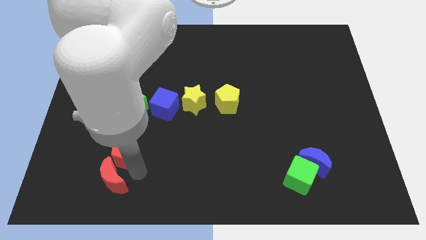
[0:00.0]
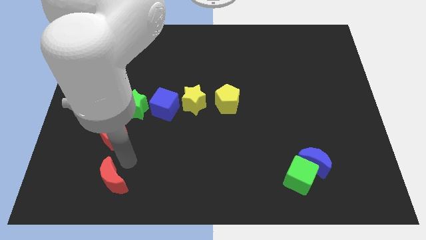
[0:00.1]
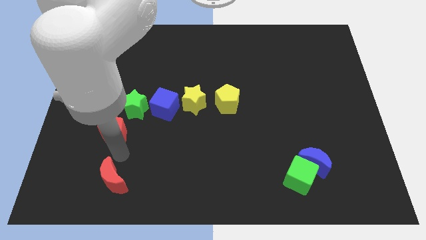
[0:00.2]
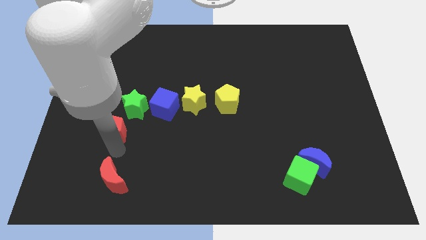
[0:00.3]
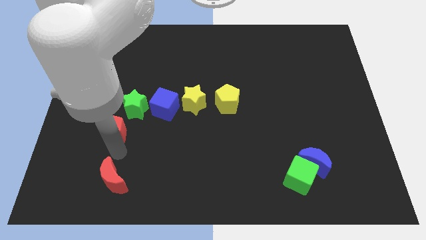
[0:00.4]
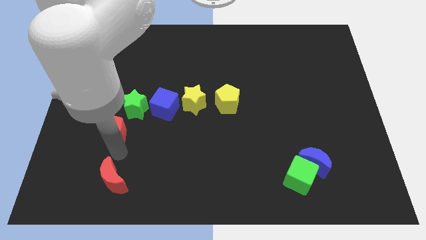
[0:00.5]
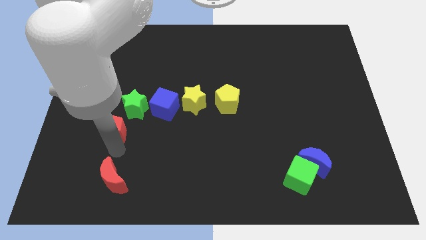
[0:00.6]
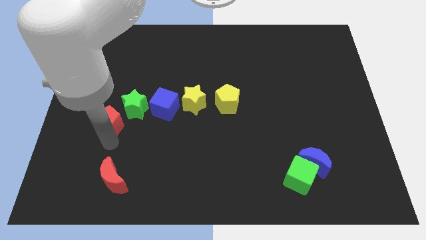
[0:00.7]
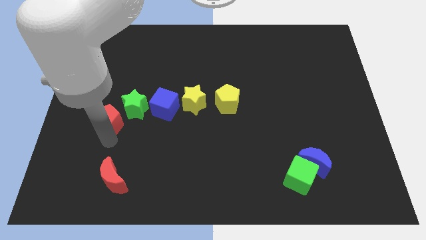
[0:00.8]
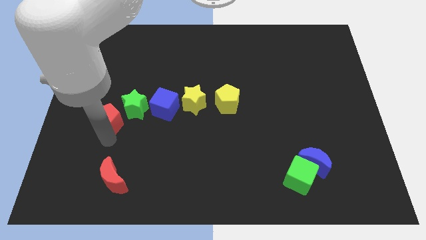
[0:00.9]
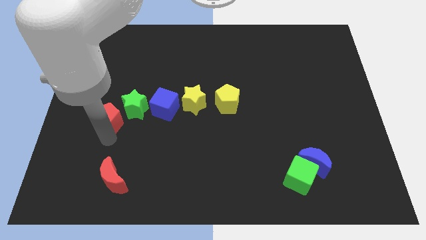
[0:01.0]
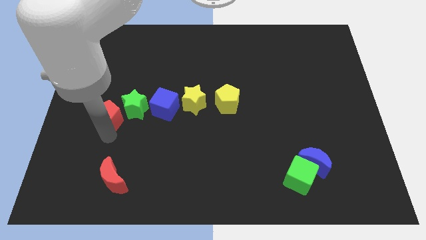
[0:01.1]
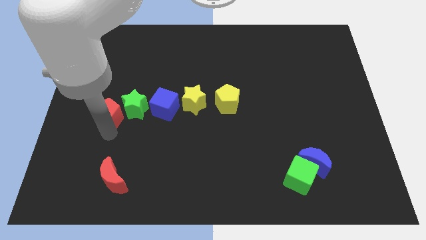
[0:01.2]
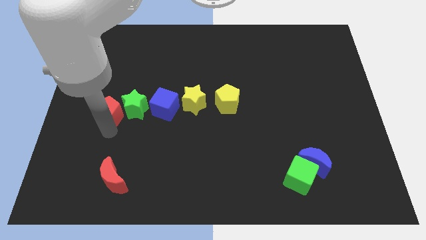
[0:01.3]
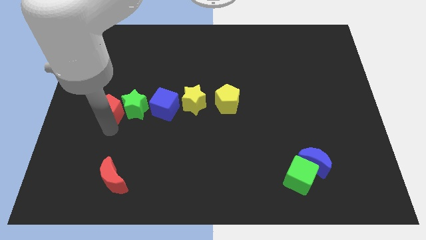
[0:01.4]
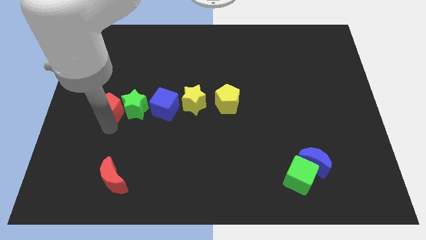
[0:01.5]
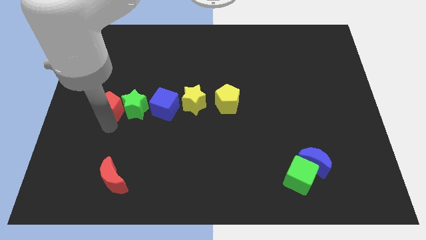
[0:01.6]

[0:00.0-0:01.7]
move the red pentagon to the left of the green star

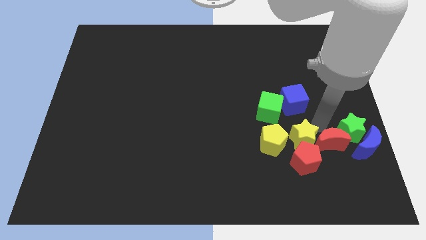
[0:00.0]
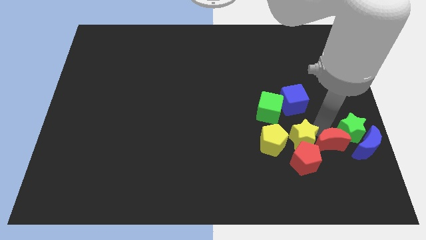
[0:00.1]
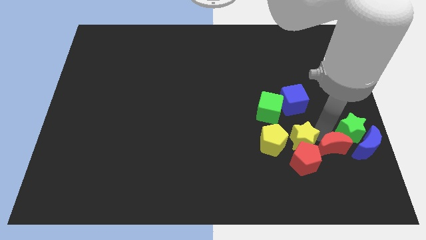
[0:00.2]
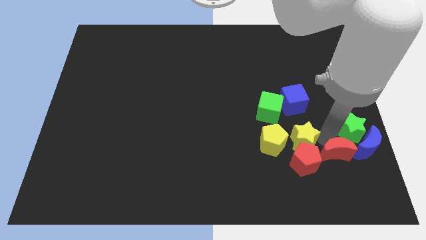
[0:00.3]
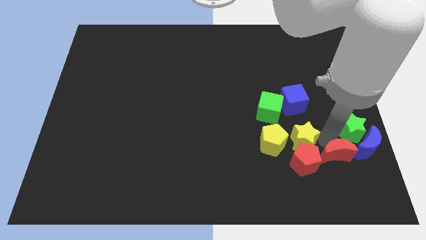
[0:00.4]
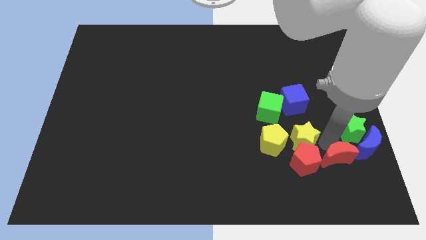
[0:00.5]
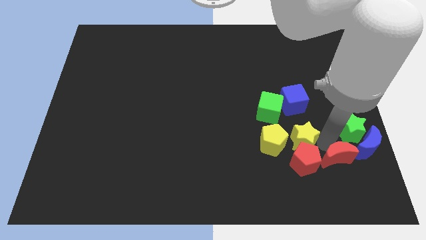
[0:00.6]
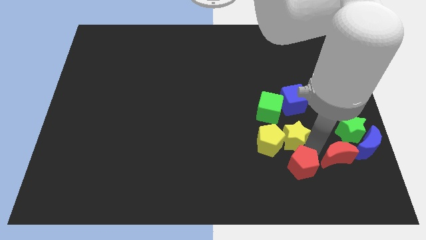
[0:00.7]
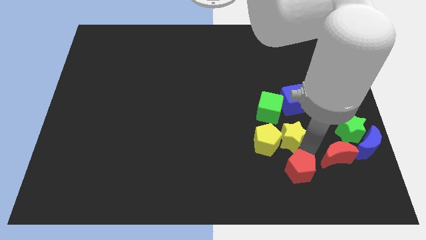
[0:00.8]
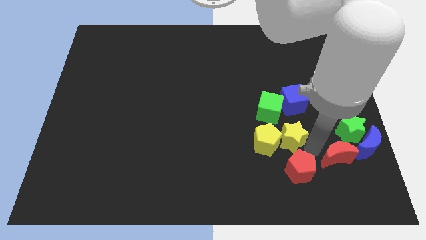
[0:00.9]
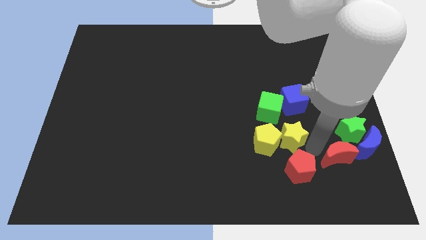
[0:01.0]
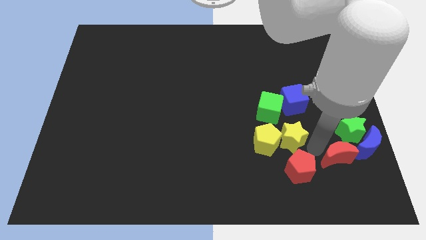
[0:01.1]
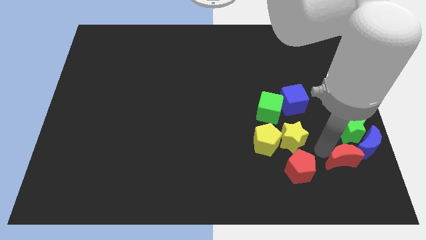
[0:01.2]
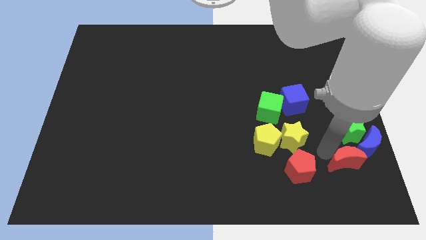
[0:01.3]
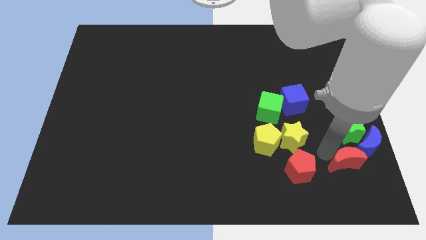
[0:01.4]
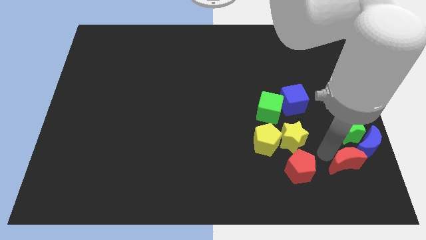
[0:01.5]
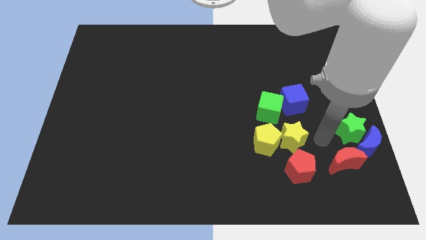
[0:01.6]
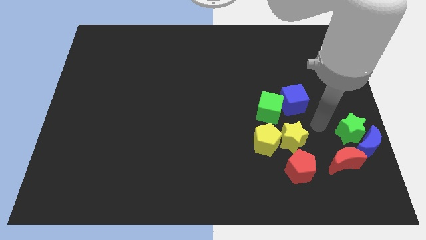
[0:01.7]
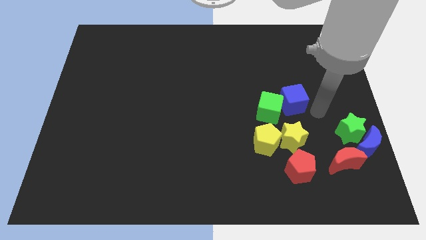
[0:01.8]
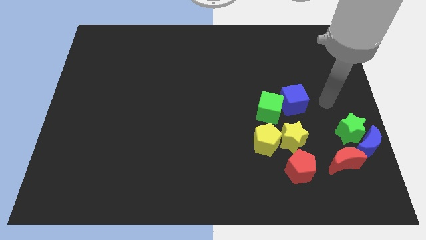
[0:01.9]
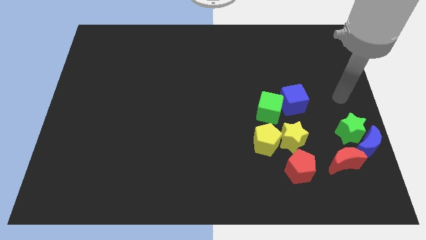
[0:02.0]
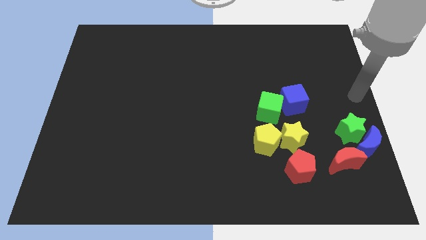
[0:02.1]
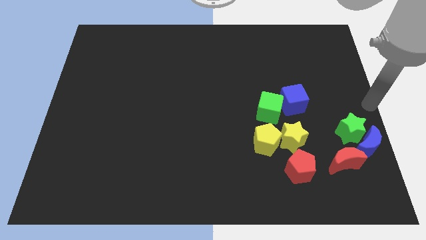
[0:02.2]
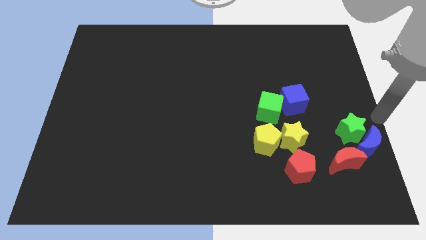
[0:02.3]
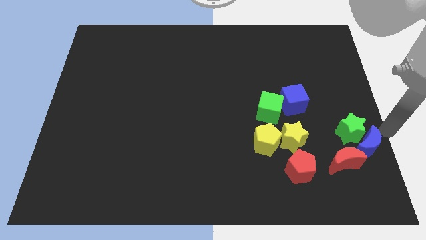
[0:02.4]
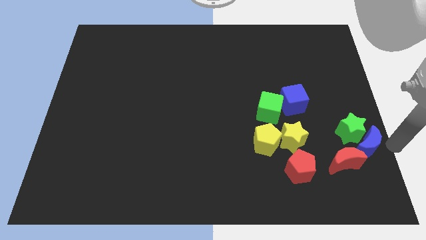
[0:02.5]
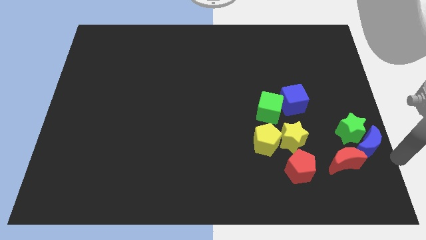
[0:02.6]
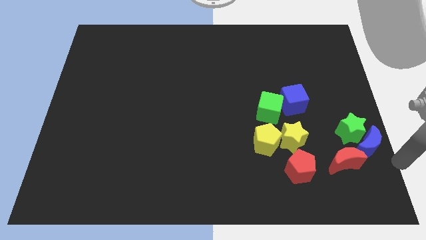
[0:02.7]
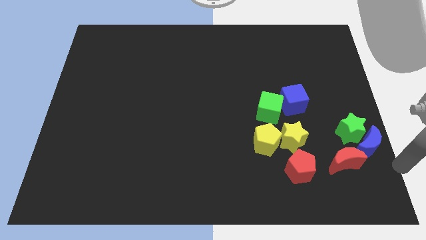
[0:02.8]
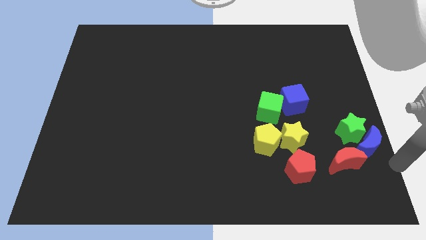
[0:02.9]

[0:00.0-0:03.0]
place your arm parallel to red mooon

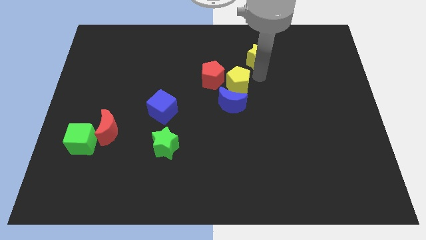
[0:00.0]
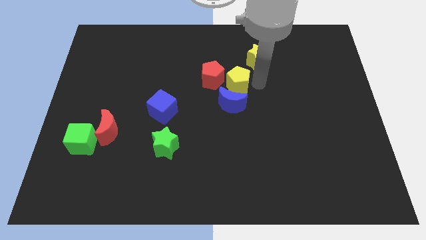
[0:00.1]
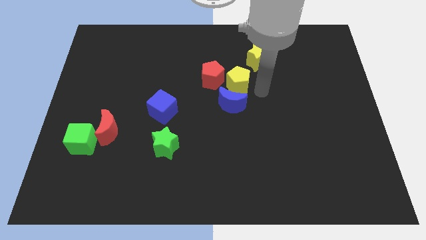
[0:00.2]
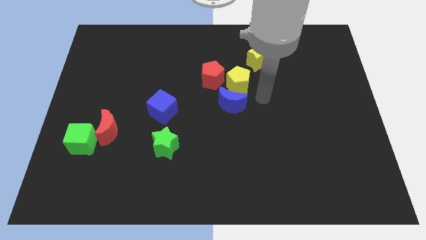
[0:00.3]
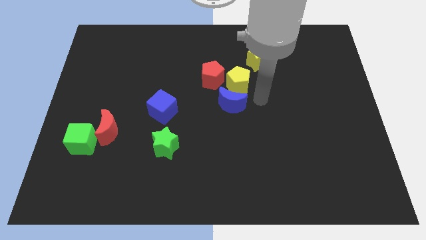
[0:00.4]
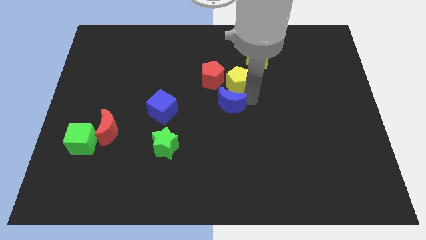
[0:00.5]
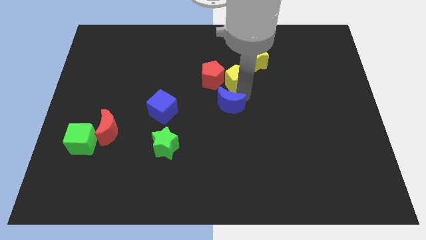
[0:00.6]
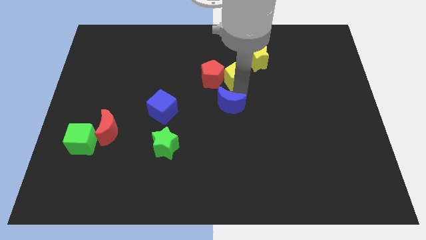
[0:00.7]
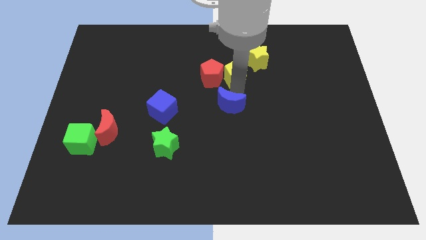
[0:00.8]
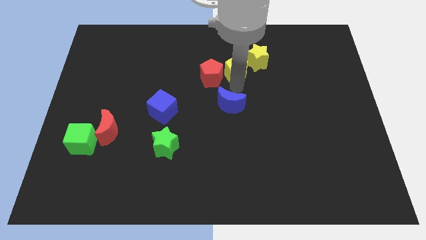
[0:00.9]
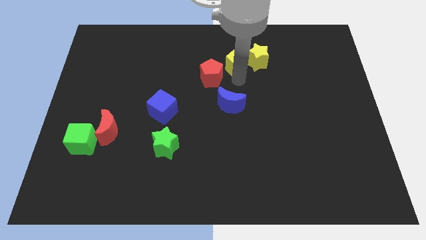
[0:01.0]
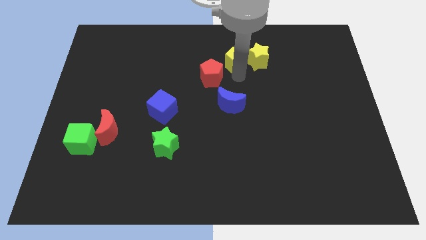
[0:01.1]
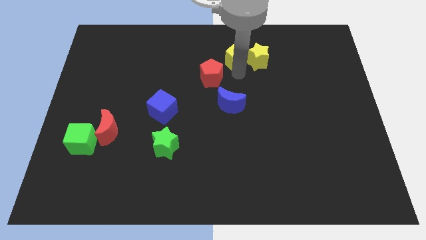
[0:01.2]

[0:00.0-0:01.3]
put the yellow pentagon to the left of the yellow star

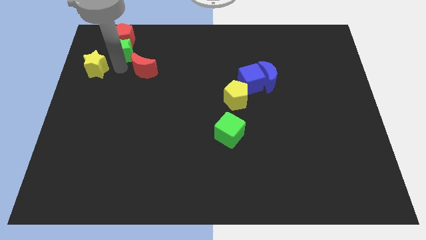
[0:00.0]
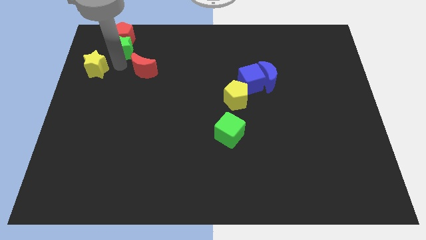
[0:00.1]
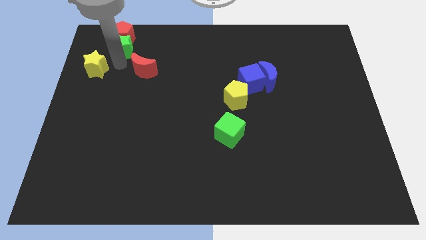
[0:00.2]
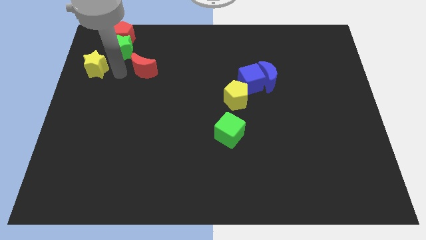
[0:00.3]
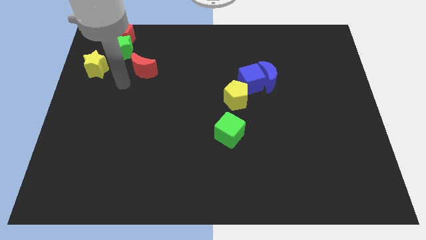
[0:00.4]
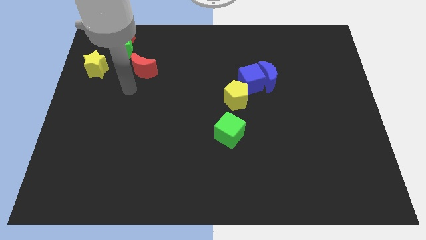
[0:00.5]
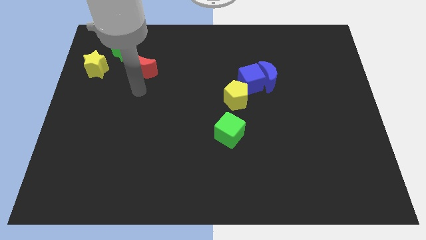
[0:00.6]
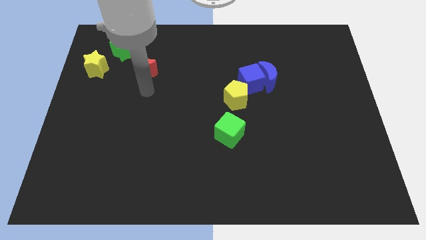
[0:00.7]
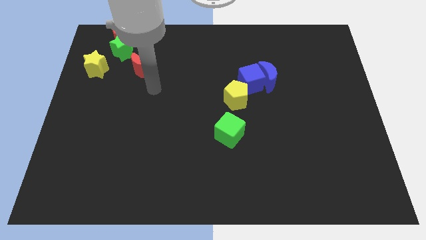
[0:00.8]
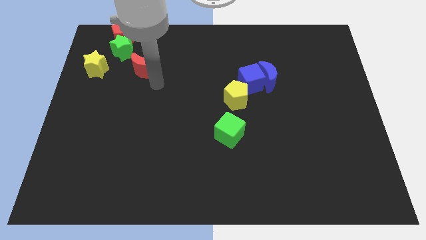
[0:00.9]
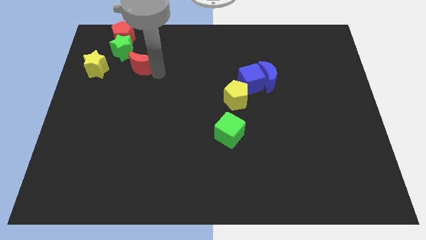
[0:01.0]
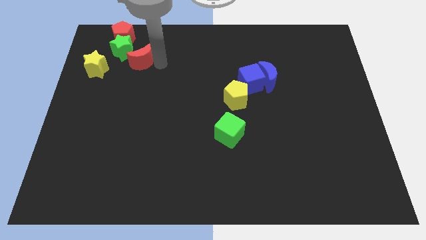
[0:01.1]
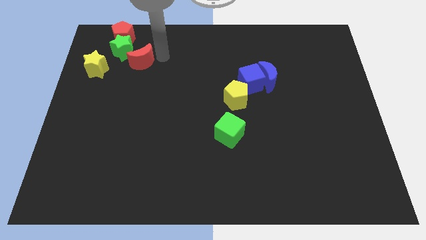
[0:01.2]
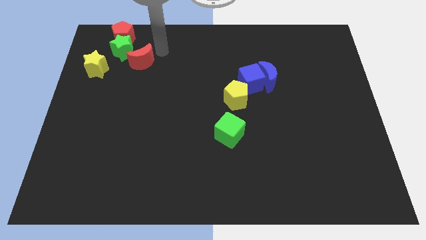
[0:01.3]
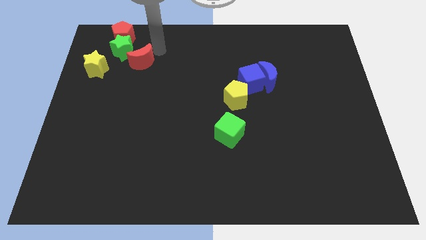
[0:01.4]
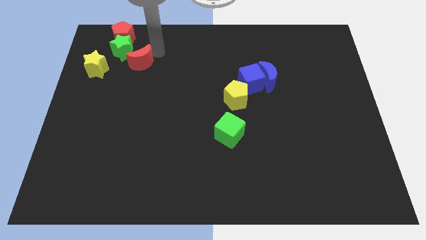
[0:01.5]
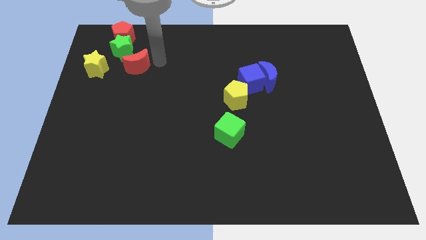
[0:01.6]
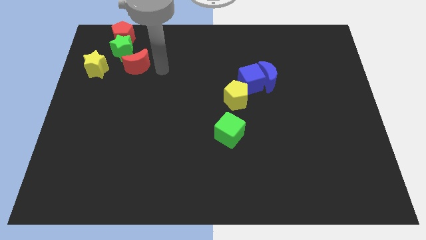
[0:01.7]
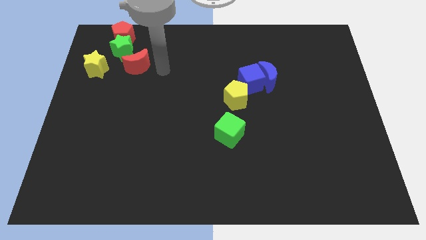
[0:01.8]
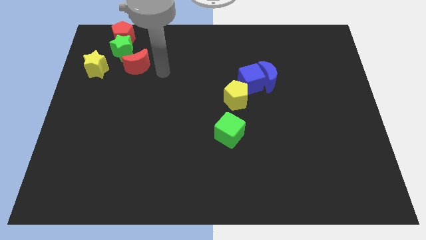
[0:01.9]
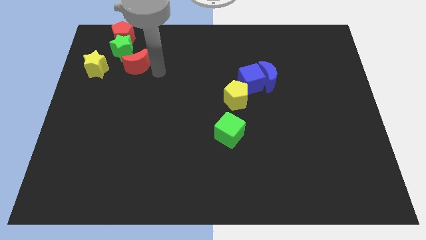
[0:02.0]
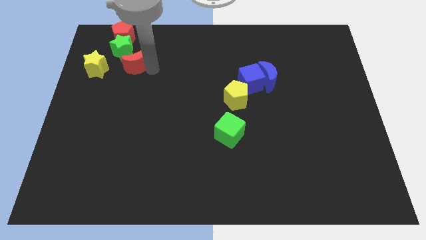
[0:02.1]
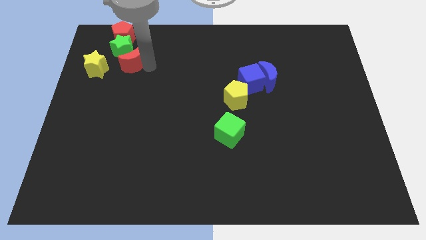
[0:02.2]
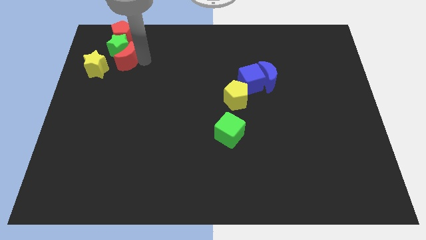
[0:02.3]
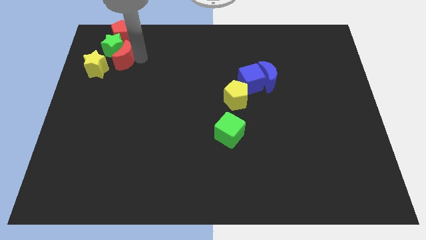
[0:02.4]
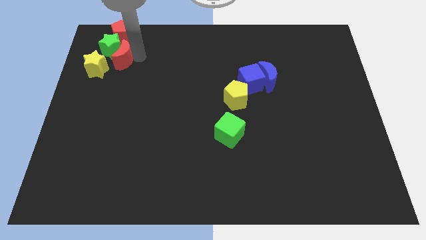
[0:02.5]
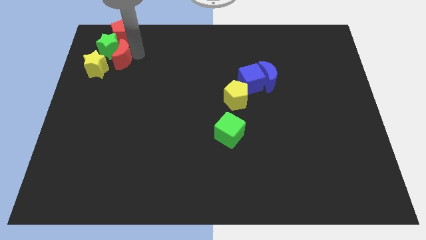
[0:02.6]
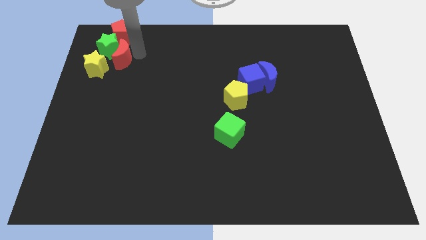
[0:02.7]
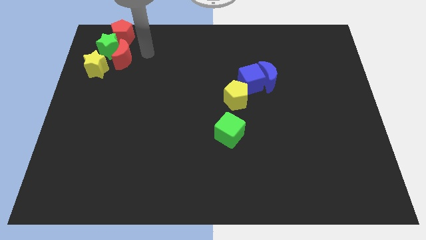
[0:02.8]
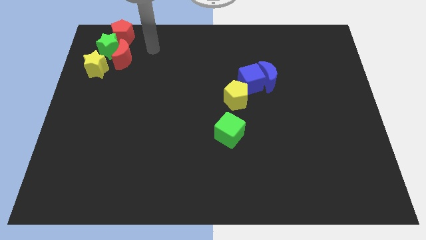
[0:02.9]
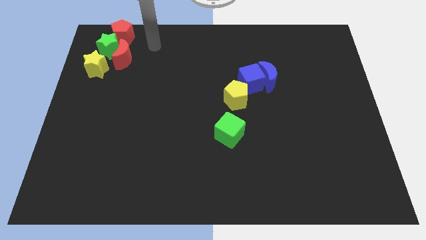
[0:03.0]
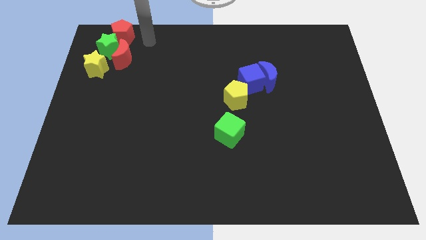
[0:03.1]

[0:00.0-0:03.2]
push red moon into green star
